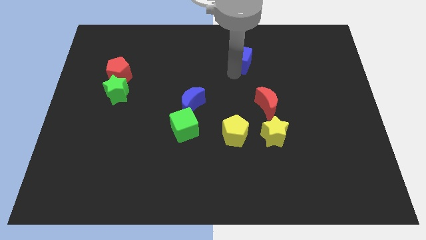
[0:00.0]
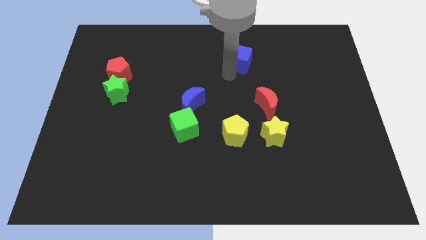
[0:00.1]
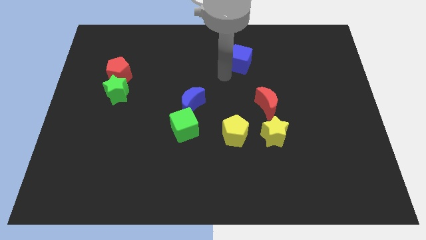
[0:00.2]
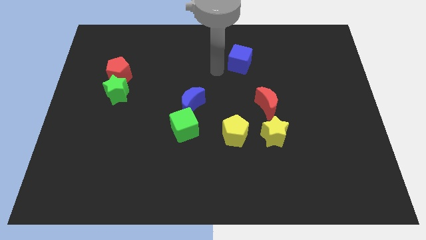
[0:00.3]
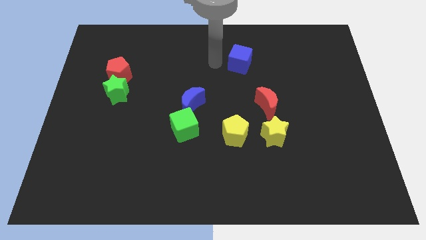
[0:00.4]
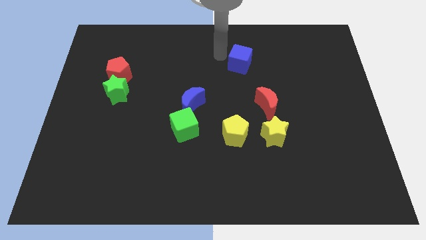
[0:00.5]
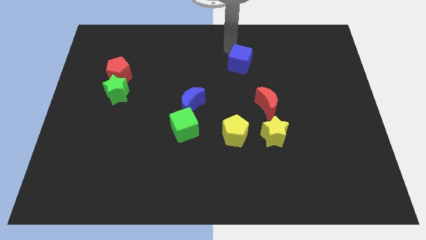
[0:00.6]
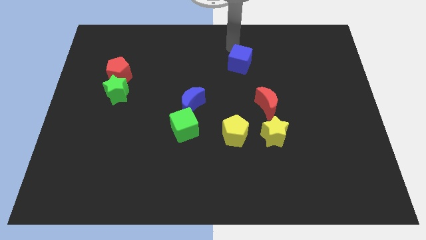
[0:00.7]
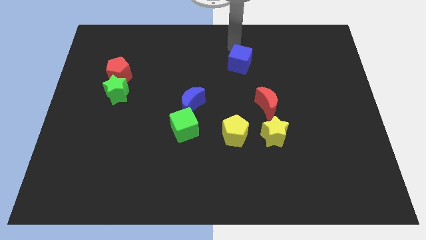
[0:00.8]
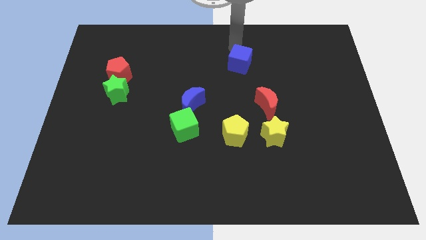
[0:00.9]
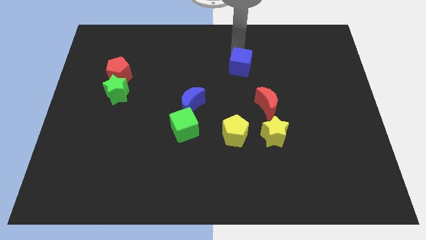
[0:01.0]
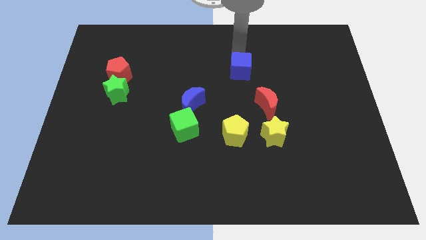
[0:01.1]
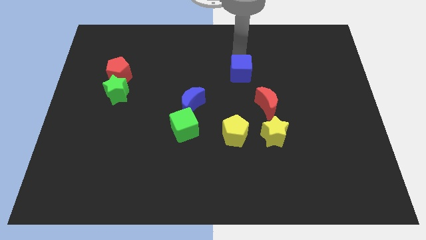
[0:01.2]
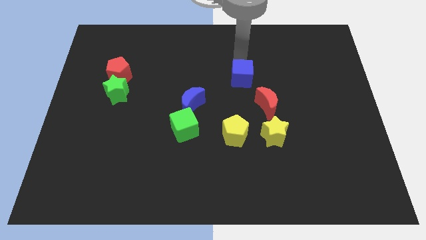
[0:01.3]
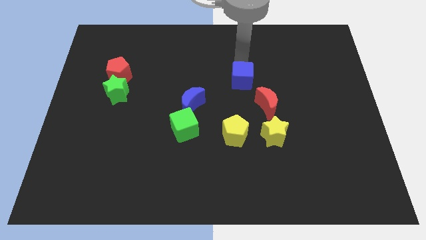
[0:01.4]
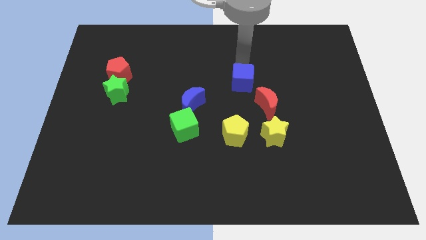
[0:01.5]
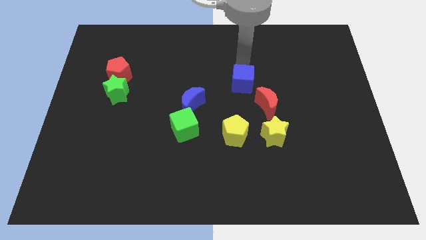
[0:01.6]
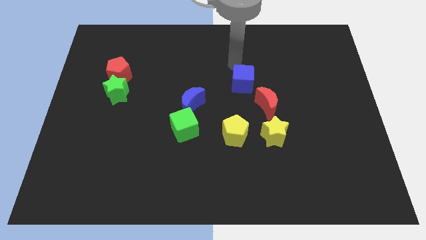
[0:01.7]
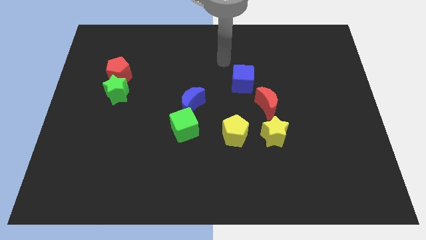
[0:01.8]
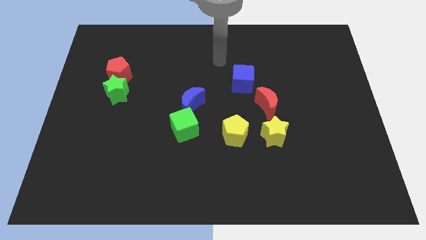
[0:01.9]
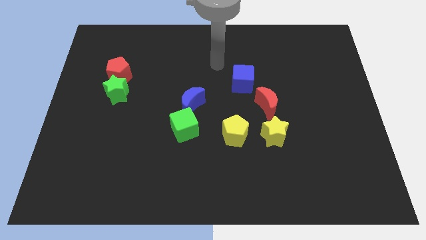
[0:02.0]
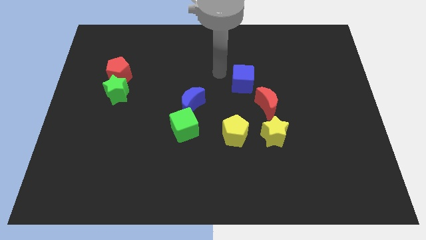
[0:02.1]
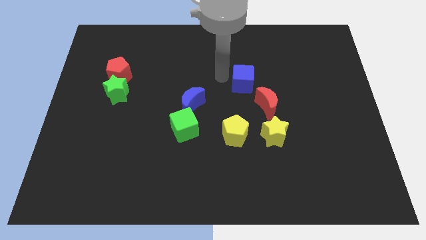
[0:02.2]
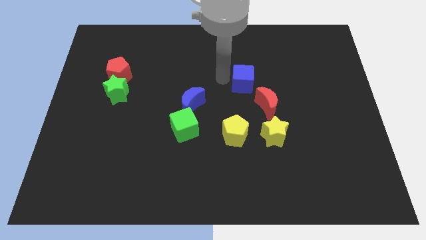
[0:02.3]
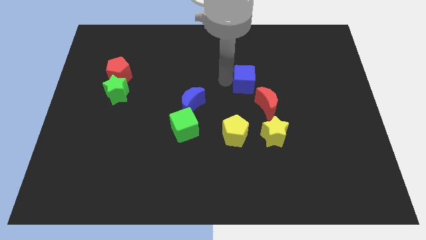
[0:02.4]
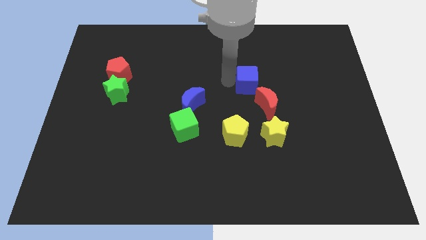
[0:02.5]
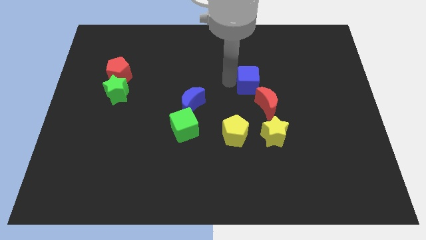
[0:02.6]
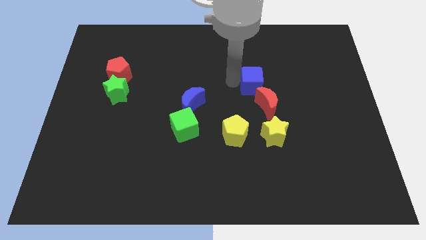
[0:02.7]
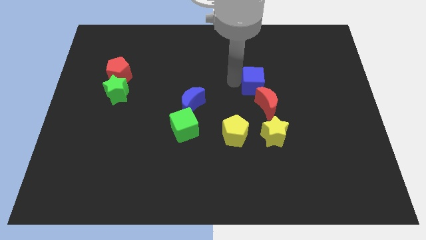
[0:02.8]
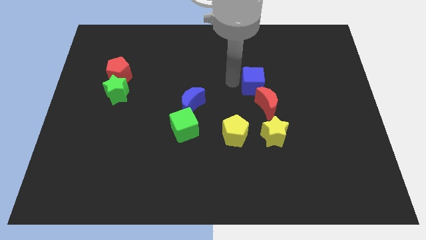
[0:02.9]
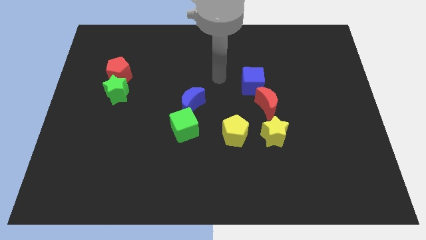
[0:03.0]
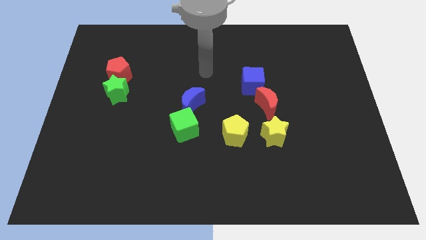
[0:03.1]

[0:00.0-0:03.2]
move the blue cube close to the red crescent

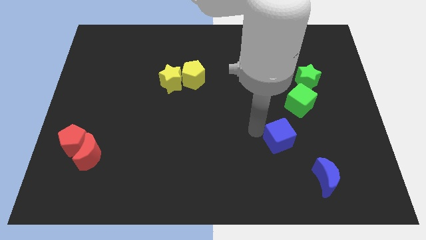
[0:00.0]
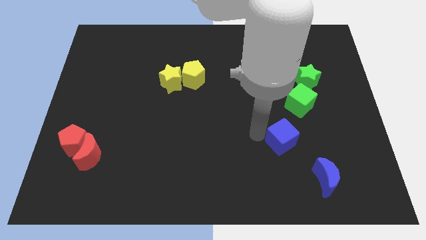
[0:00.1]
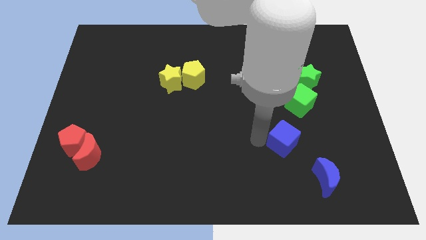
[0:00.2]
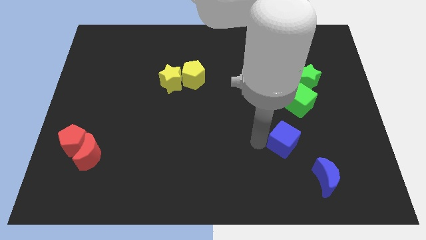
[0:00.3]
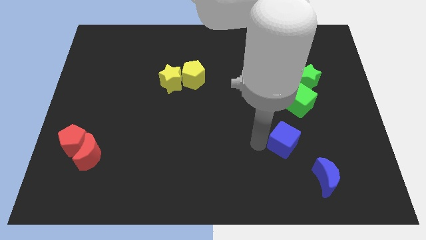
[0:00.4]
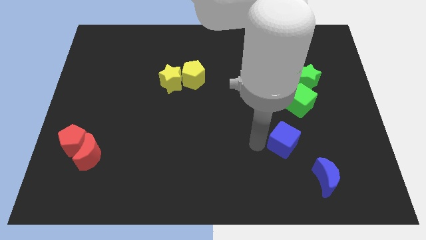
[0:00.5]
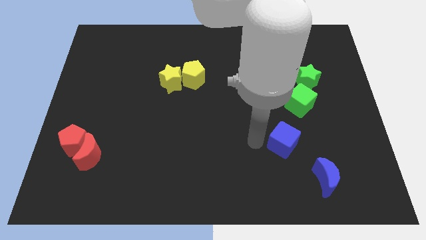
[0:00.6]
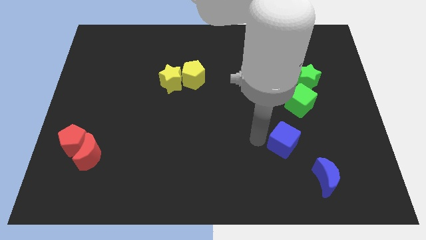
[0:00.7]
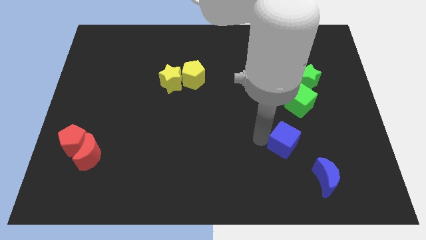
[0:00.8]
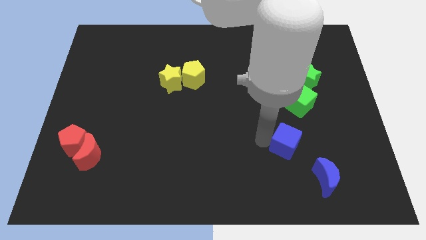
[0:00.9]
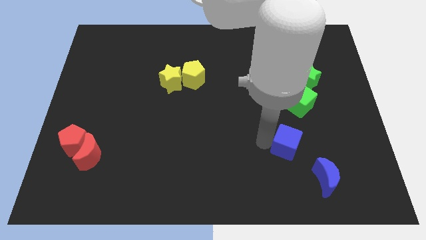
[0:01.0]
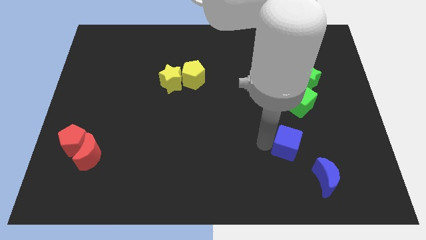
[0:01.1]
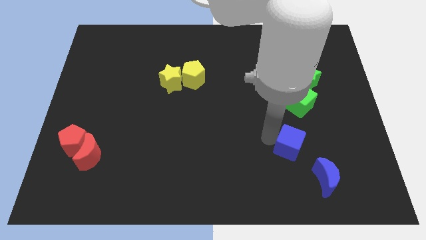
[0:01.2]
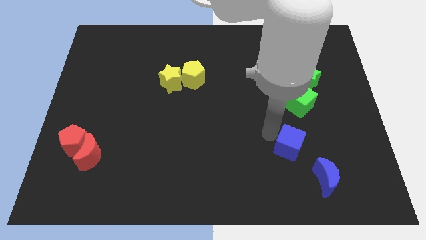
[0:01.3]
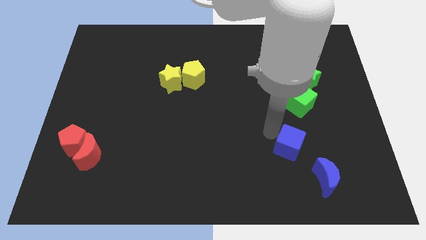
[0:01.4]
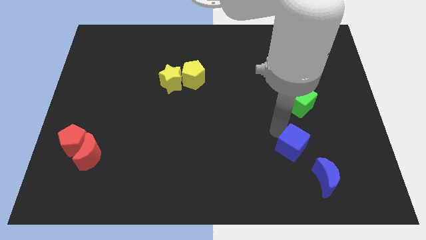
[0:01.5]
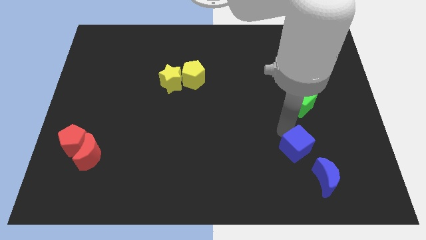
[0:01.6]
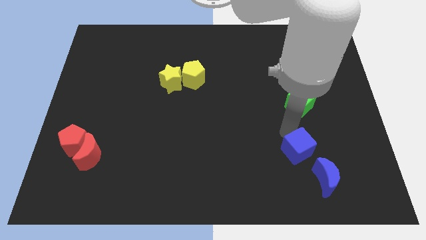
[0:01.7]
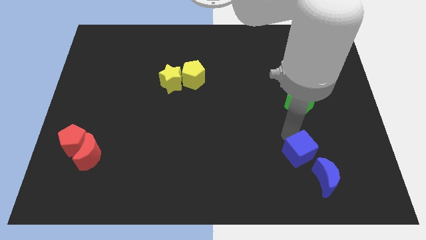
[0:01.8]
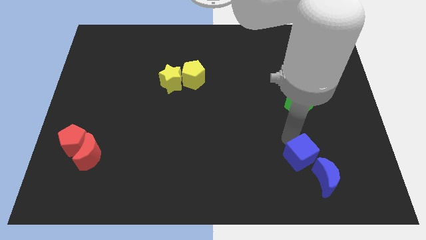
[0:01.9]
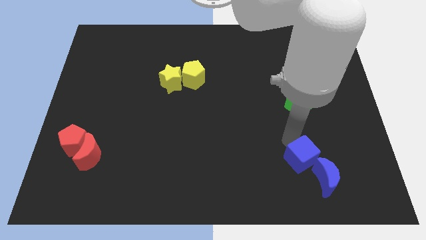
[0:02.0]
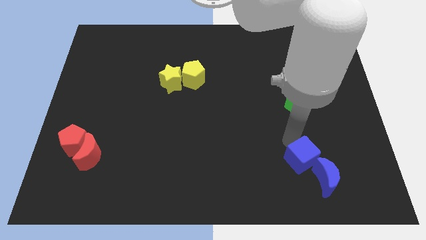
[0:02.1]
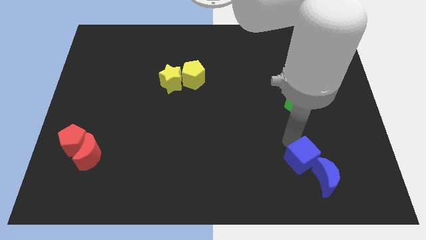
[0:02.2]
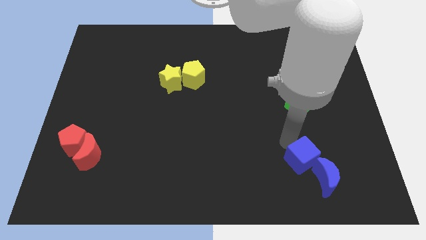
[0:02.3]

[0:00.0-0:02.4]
move the blue cube above the blue crescent

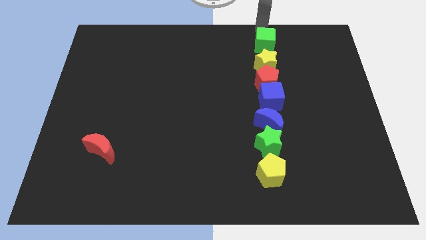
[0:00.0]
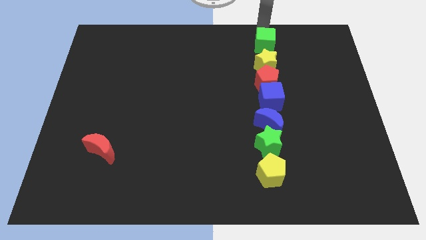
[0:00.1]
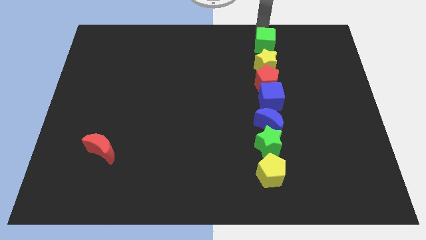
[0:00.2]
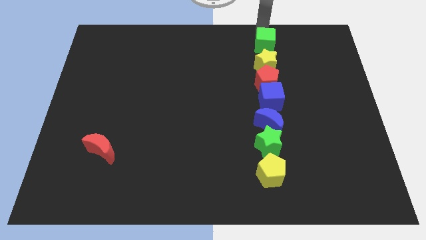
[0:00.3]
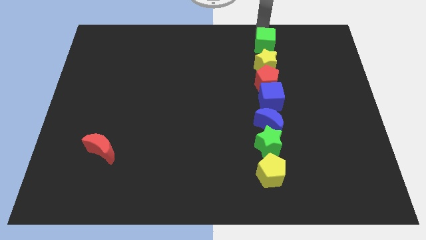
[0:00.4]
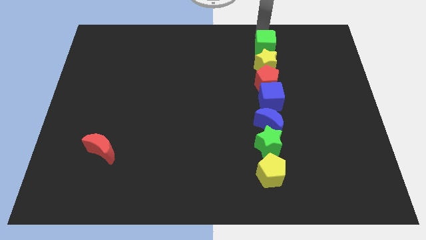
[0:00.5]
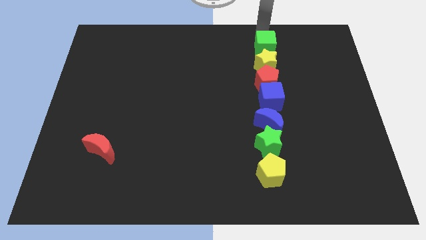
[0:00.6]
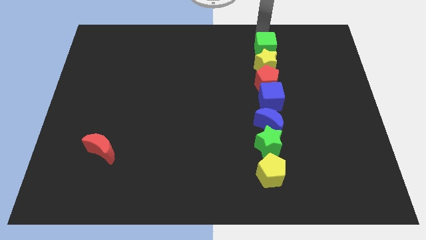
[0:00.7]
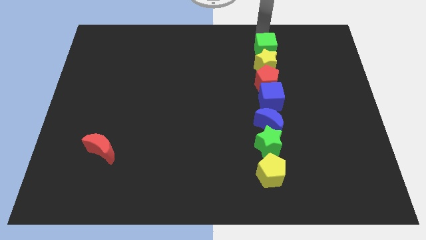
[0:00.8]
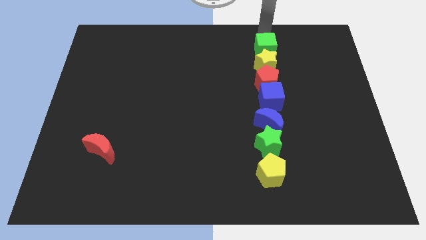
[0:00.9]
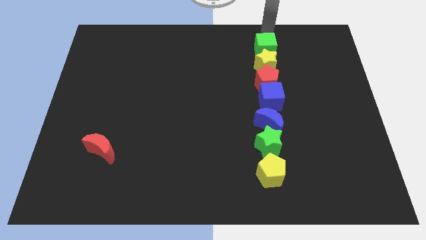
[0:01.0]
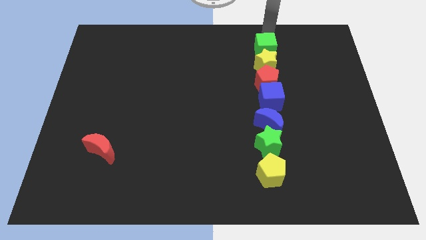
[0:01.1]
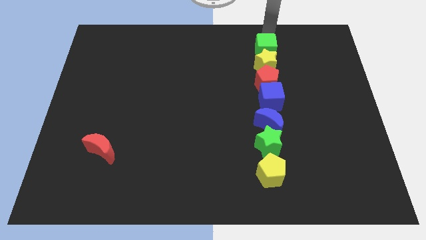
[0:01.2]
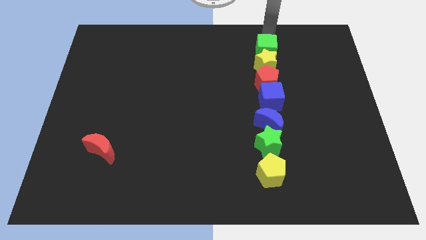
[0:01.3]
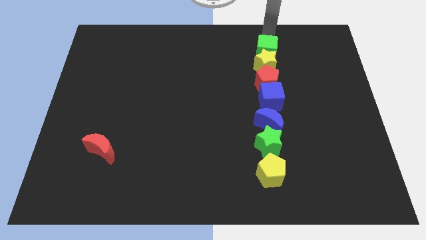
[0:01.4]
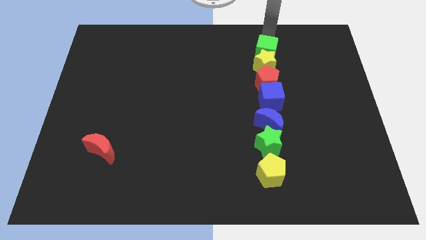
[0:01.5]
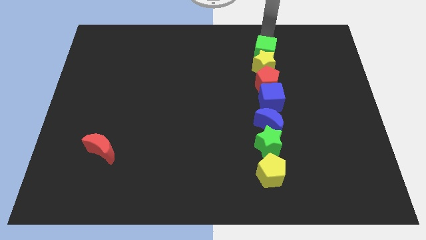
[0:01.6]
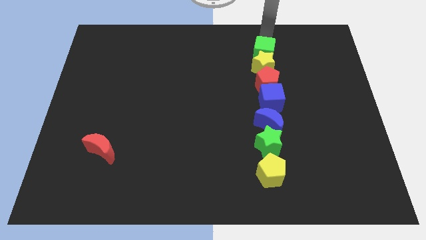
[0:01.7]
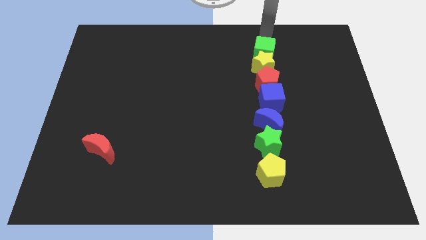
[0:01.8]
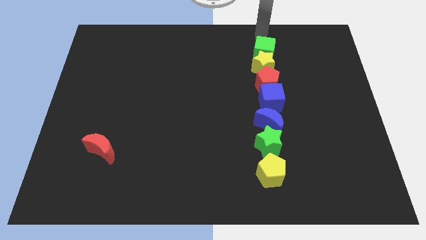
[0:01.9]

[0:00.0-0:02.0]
move green cube into yellow star

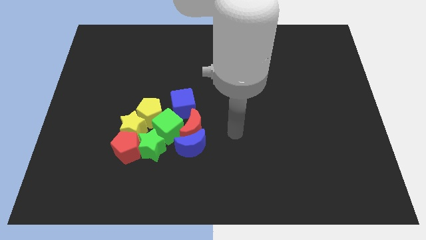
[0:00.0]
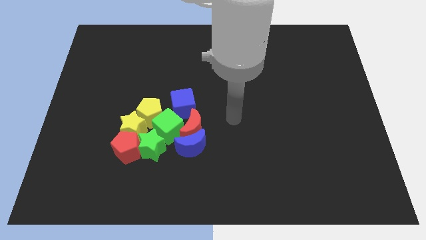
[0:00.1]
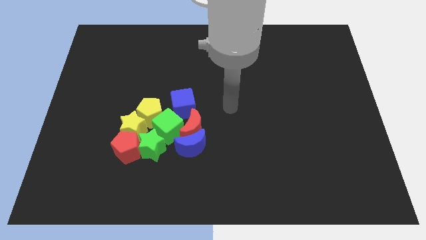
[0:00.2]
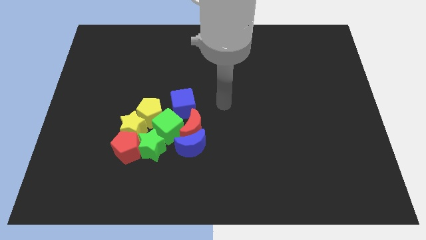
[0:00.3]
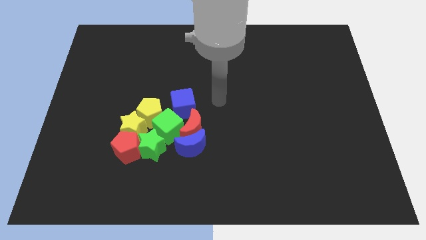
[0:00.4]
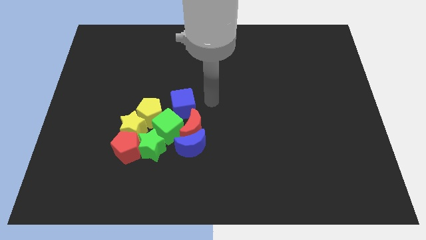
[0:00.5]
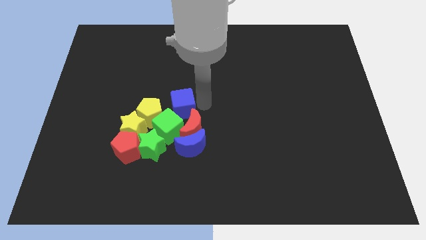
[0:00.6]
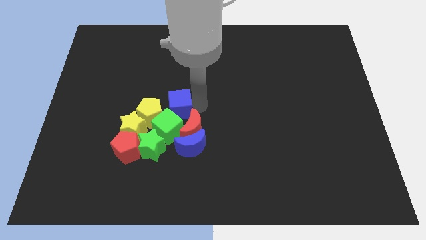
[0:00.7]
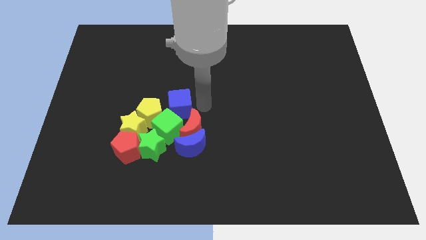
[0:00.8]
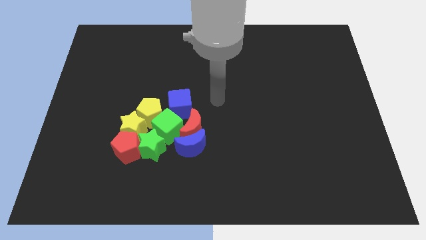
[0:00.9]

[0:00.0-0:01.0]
touch the blue cube on the right side

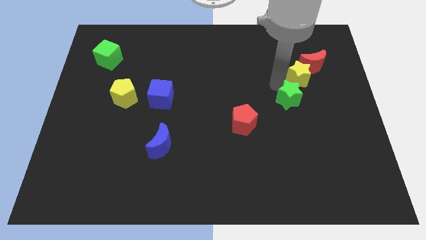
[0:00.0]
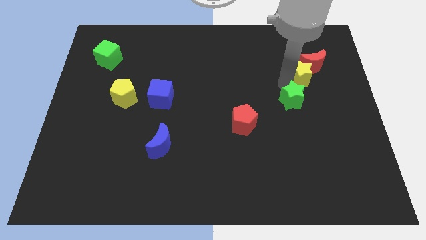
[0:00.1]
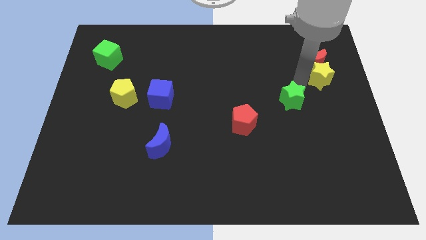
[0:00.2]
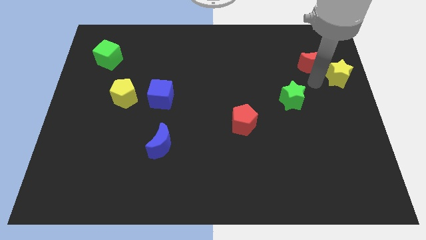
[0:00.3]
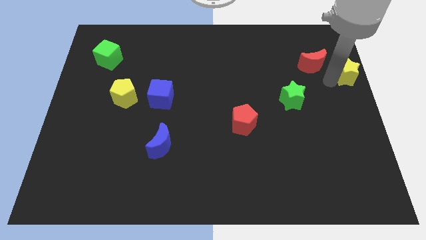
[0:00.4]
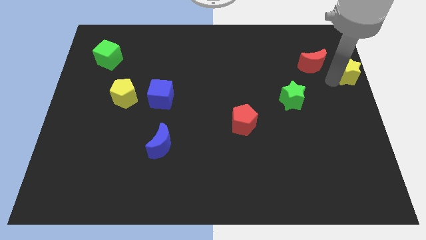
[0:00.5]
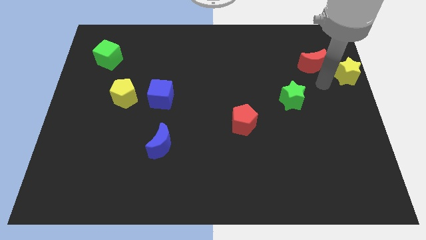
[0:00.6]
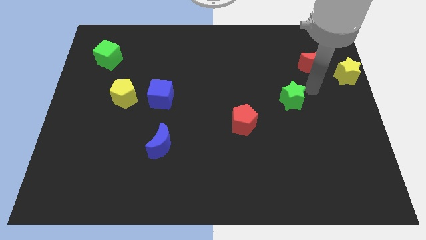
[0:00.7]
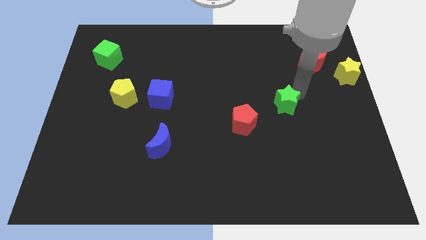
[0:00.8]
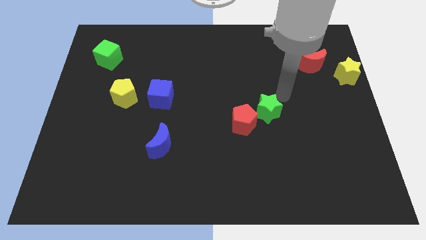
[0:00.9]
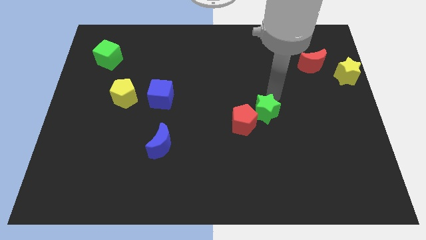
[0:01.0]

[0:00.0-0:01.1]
separate yellow and green stars
